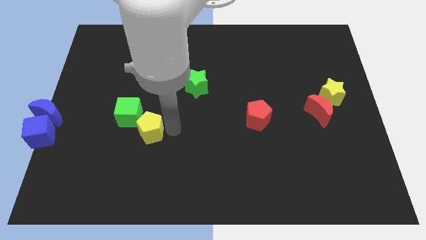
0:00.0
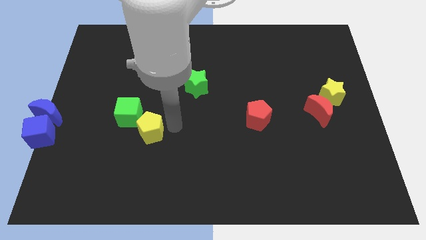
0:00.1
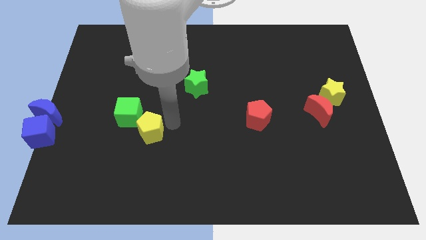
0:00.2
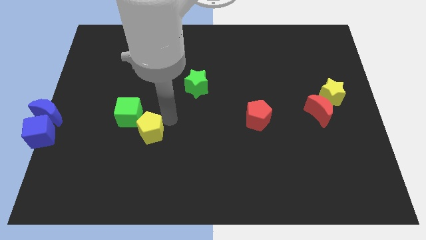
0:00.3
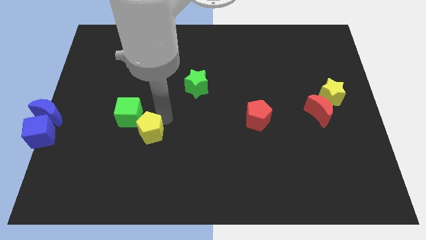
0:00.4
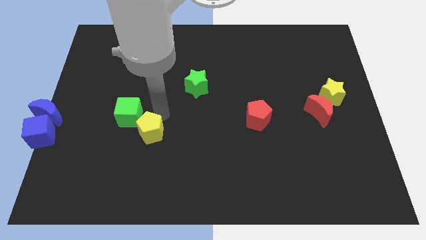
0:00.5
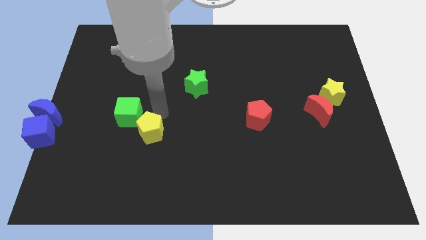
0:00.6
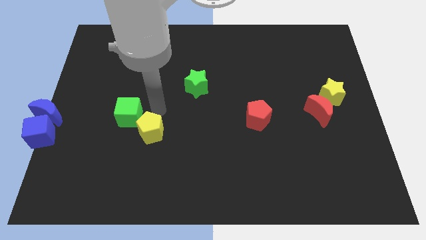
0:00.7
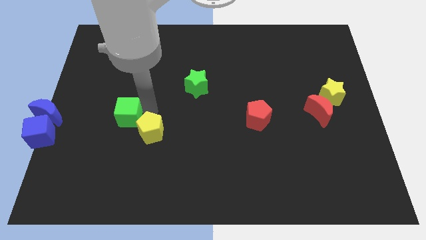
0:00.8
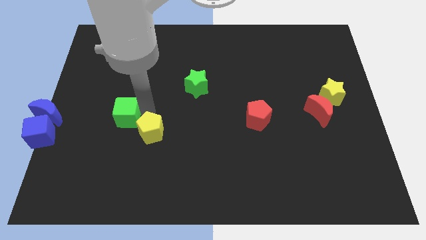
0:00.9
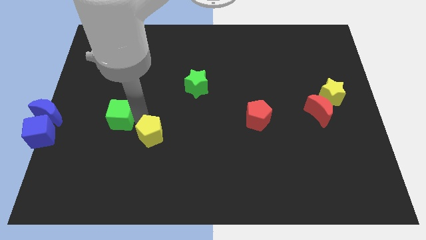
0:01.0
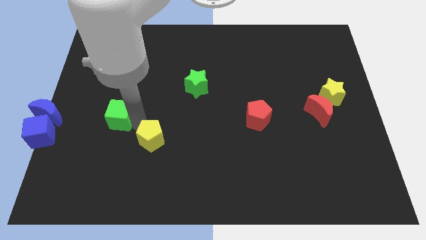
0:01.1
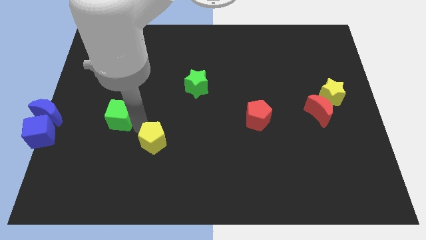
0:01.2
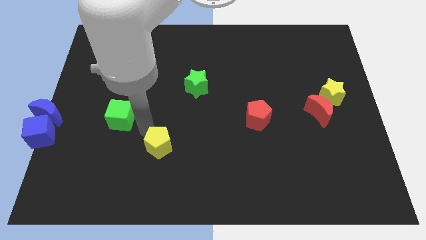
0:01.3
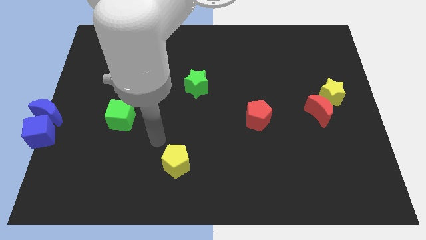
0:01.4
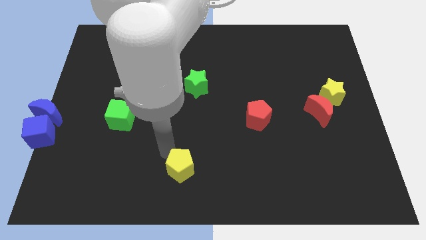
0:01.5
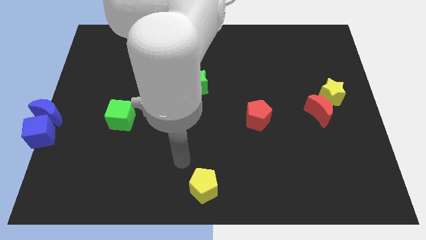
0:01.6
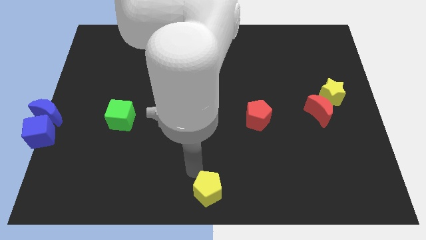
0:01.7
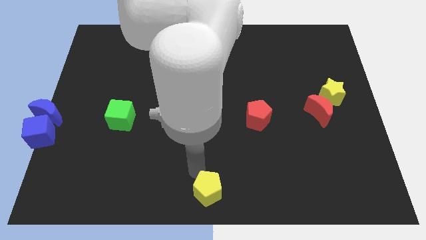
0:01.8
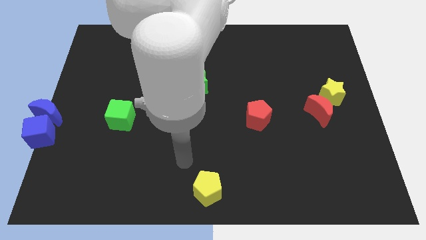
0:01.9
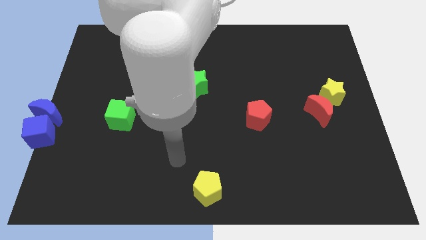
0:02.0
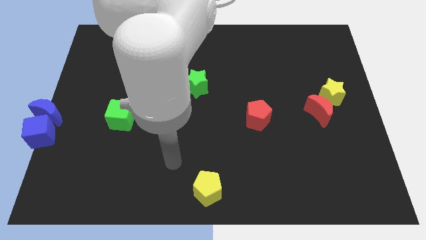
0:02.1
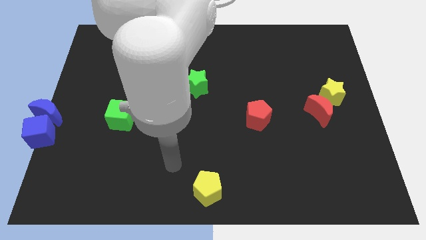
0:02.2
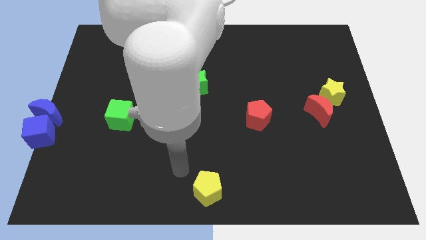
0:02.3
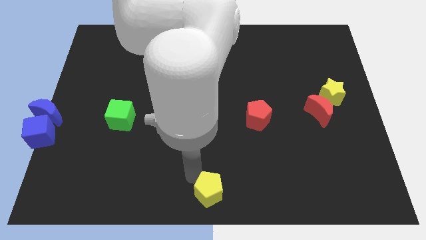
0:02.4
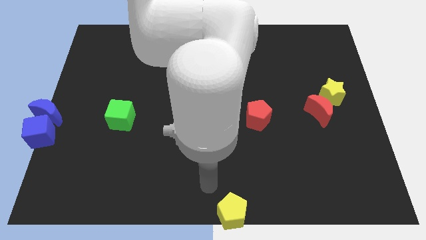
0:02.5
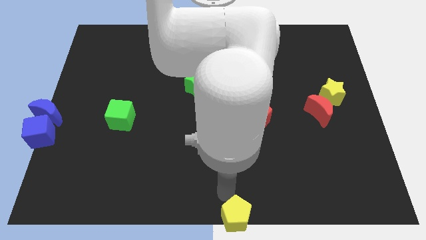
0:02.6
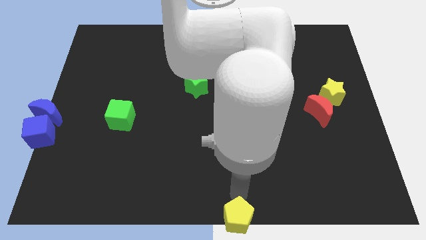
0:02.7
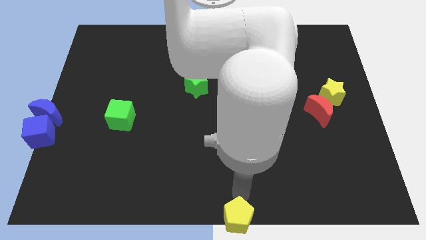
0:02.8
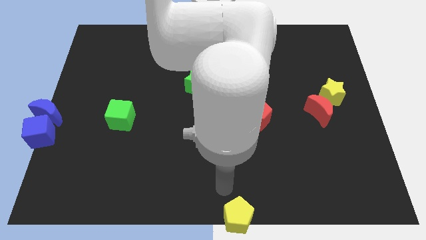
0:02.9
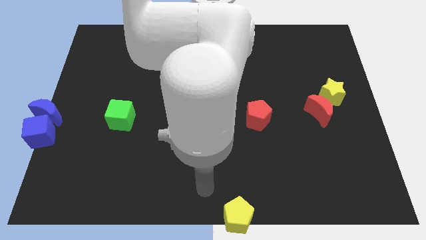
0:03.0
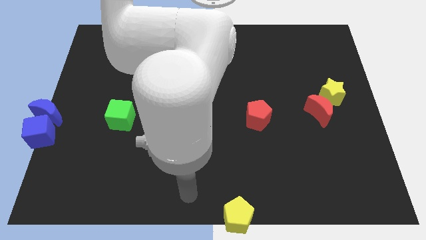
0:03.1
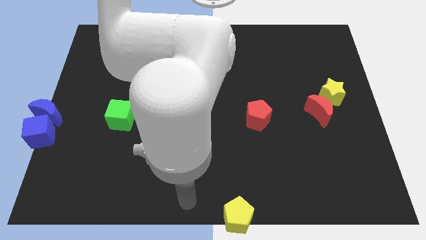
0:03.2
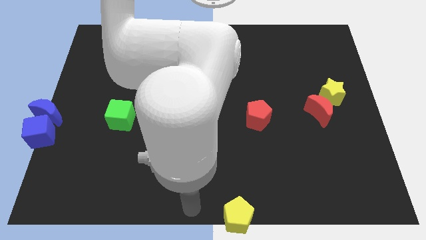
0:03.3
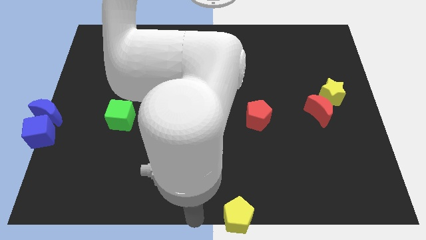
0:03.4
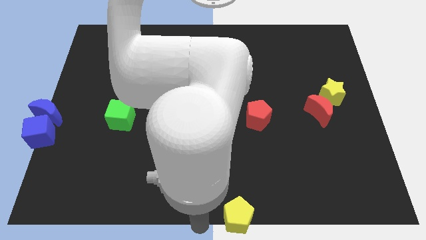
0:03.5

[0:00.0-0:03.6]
separate the yellow pentagon from the green cube

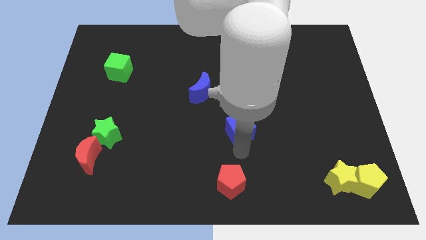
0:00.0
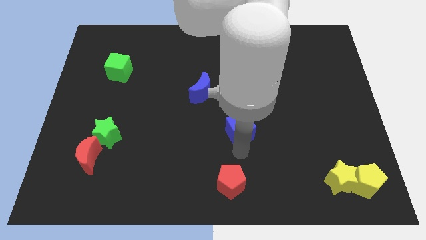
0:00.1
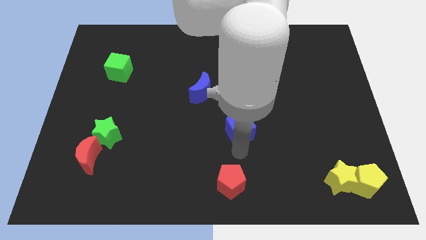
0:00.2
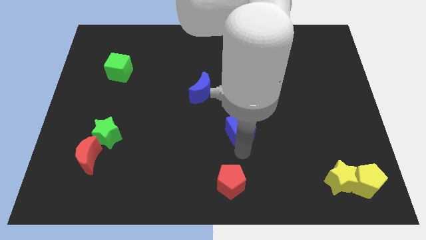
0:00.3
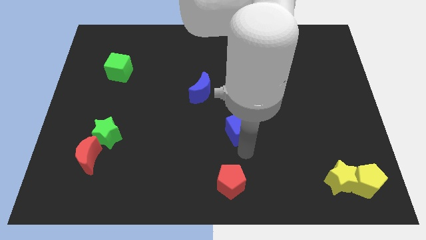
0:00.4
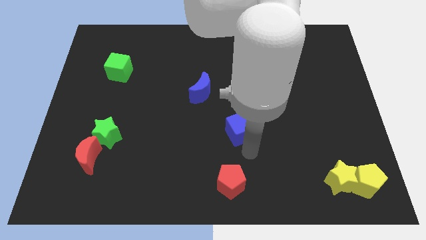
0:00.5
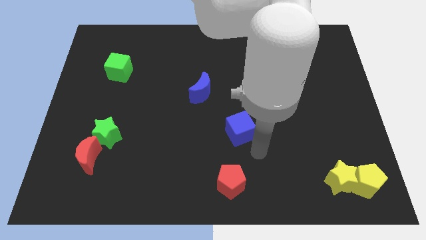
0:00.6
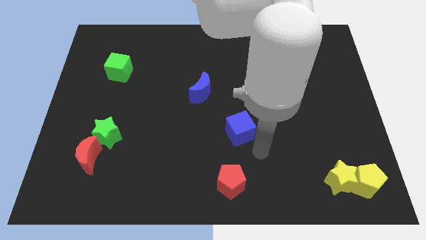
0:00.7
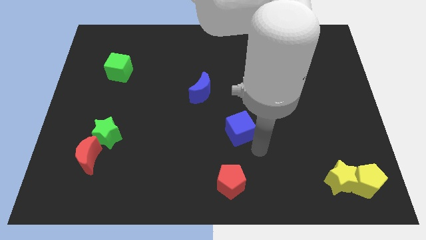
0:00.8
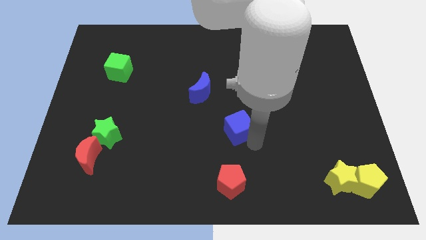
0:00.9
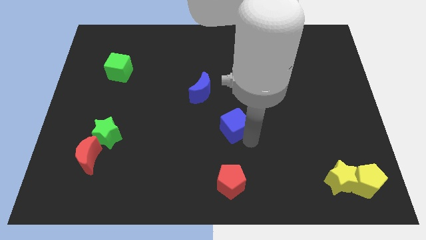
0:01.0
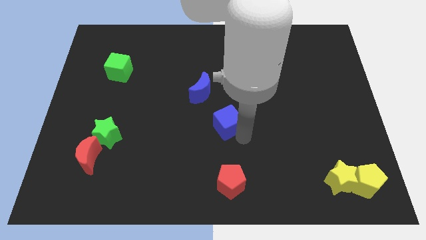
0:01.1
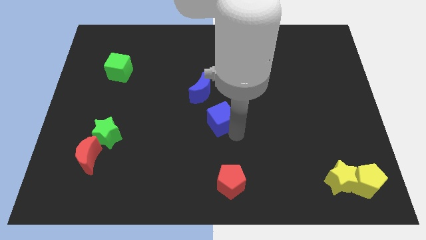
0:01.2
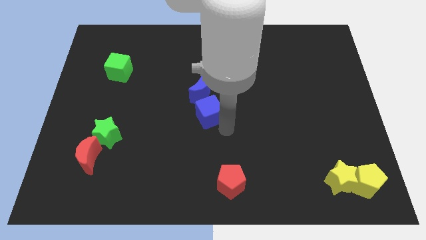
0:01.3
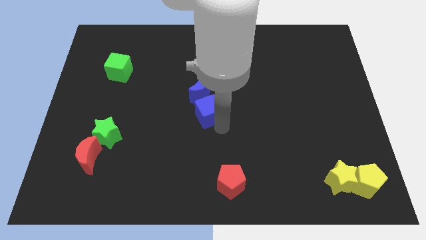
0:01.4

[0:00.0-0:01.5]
move blue cube to the center of the board

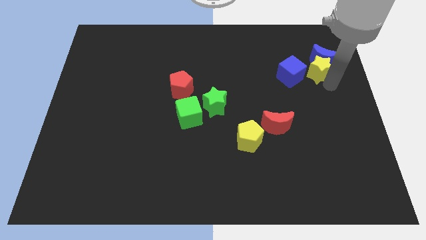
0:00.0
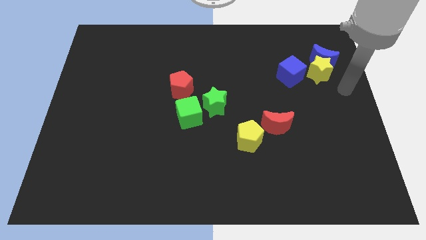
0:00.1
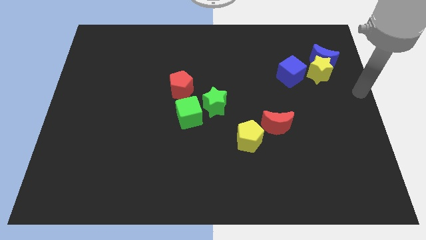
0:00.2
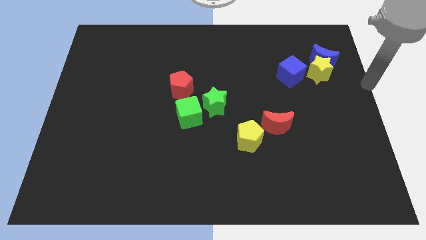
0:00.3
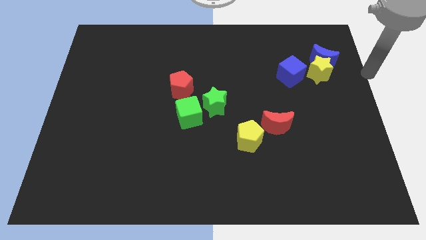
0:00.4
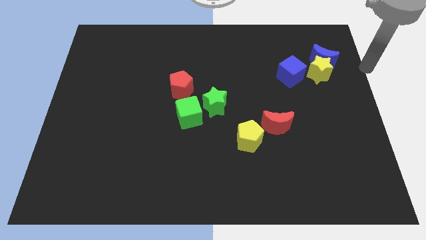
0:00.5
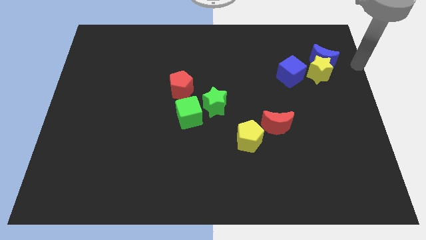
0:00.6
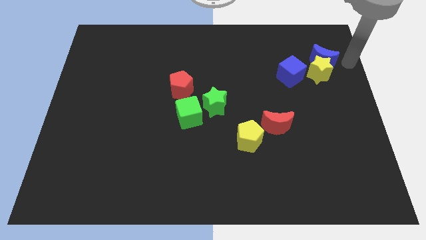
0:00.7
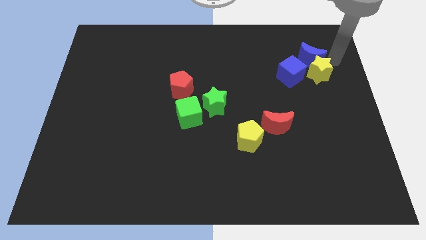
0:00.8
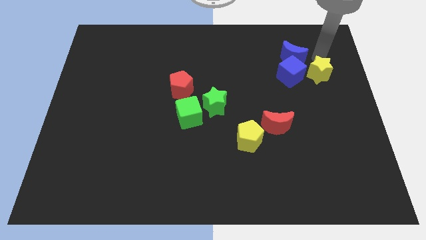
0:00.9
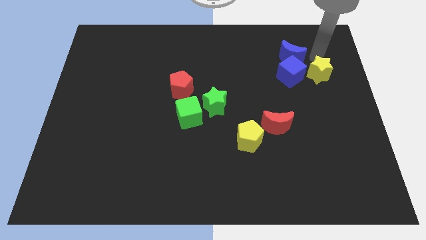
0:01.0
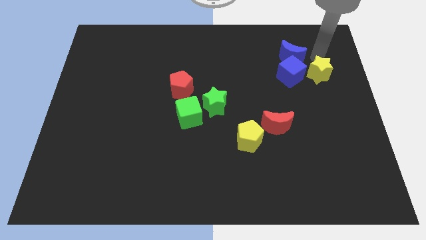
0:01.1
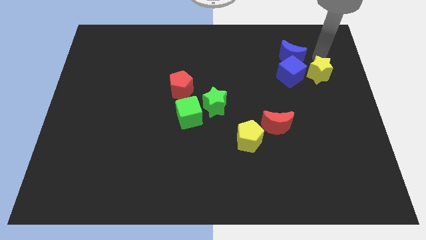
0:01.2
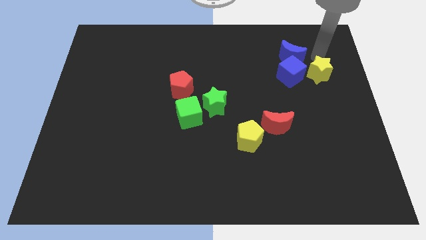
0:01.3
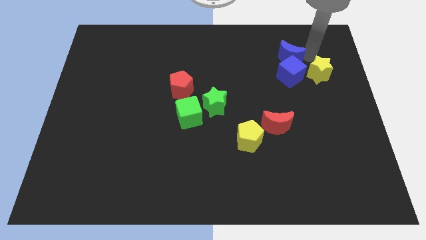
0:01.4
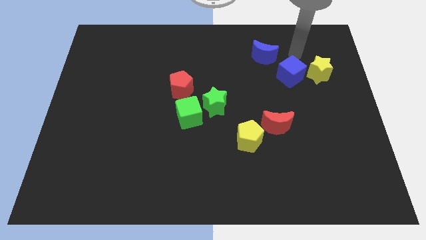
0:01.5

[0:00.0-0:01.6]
push the blue crescent to the top of the blue cube

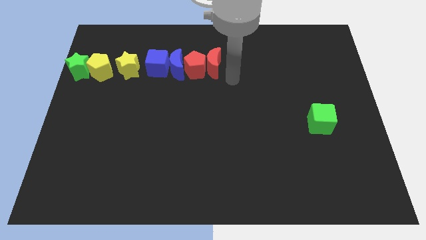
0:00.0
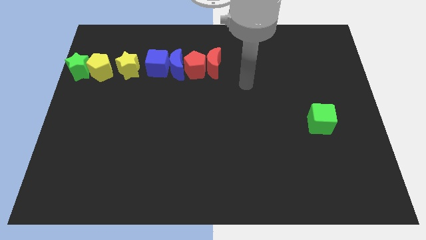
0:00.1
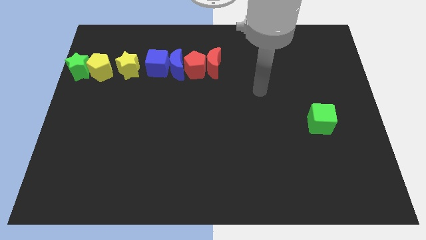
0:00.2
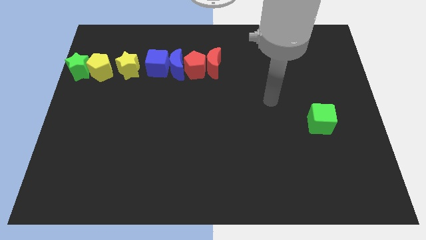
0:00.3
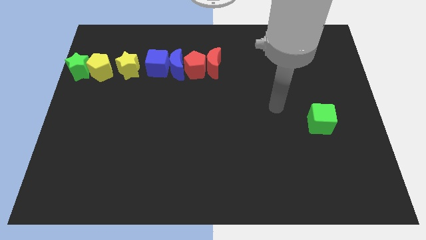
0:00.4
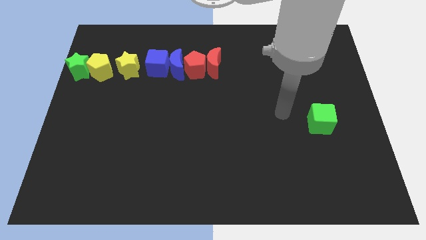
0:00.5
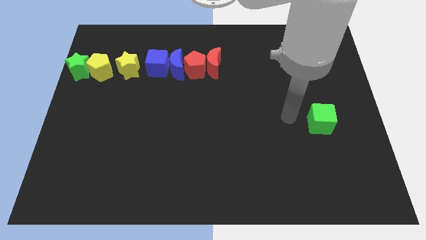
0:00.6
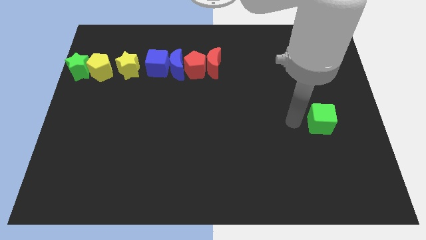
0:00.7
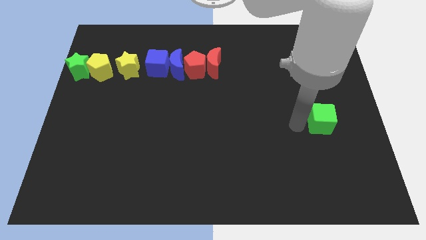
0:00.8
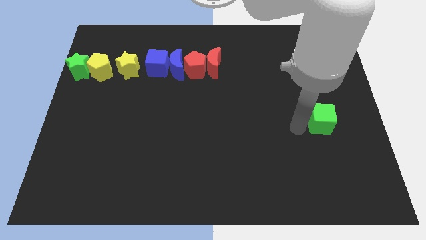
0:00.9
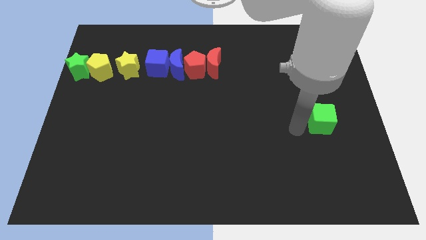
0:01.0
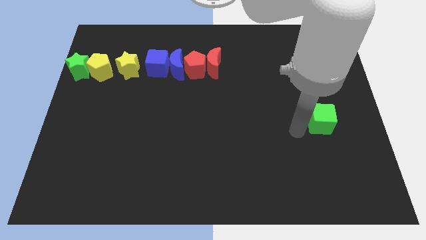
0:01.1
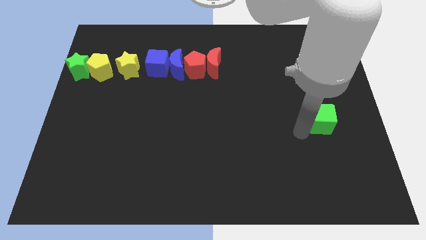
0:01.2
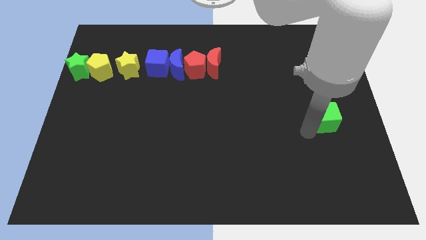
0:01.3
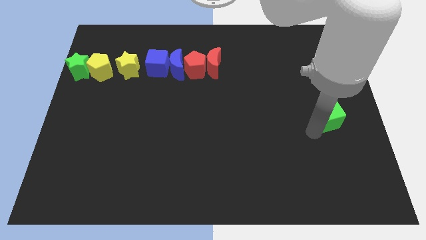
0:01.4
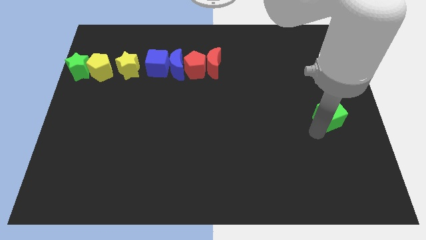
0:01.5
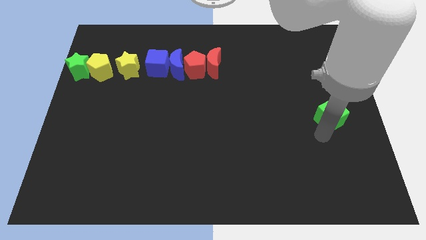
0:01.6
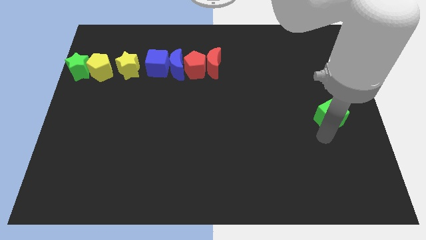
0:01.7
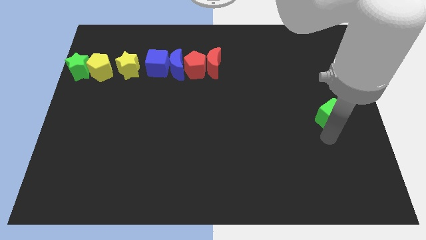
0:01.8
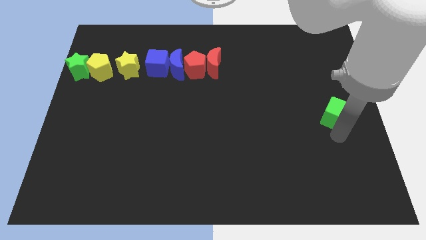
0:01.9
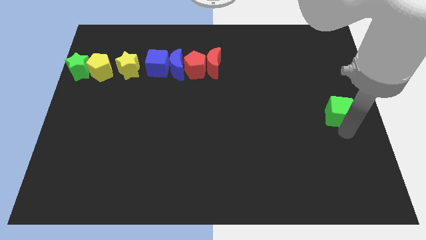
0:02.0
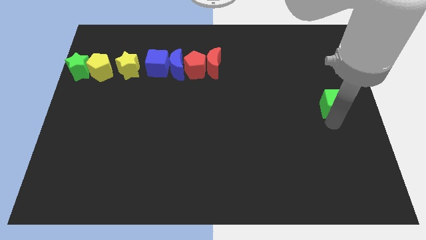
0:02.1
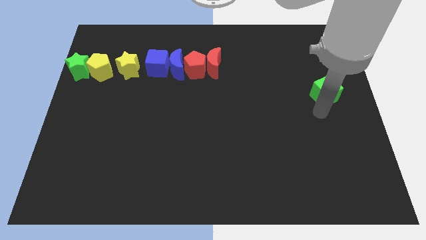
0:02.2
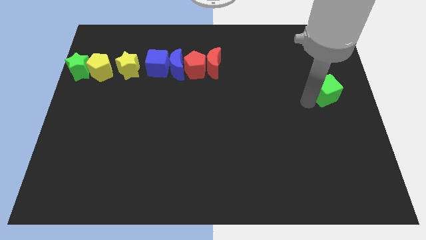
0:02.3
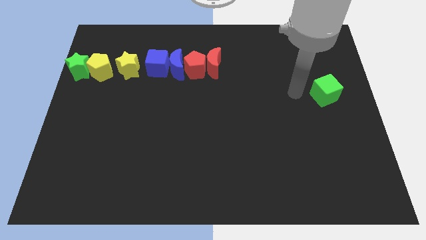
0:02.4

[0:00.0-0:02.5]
push the green cube slightly to the top
